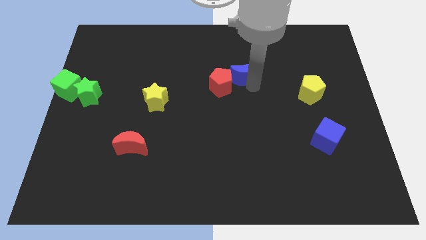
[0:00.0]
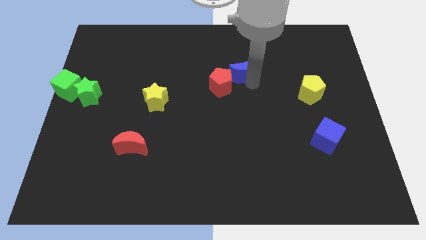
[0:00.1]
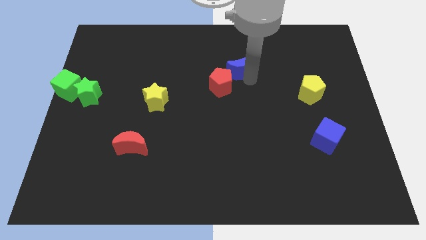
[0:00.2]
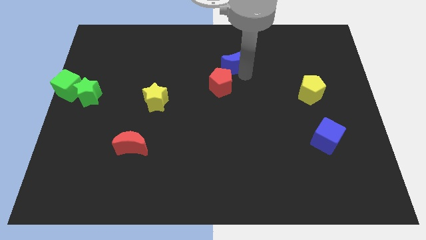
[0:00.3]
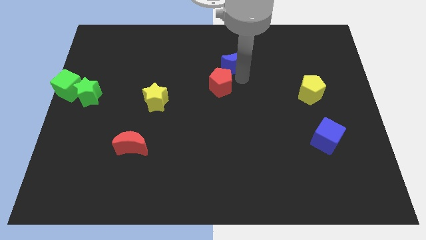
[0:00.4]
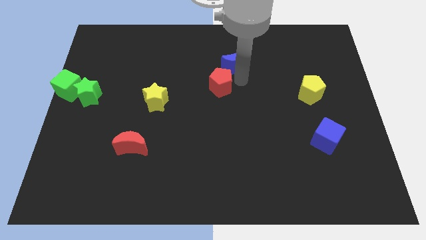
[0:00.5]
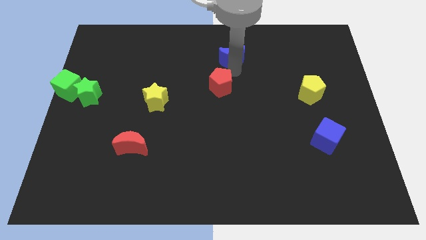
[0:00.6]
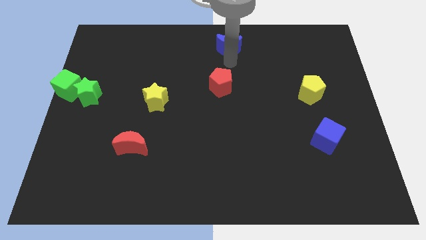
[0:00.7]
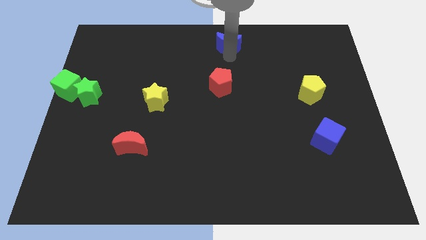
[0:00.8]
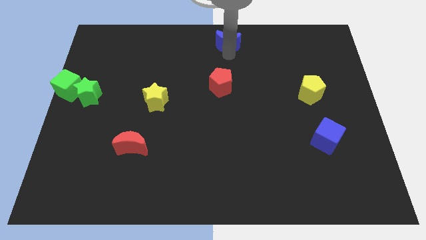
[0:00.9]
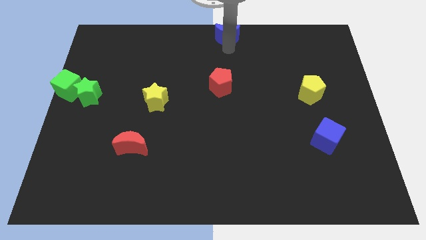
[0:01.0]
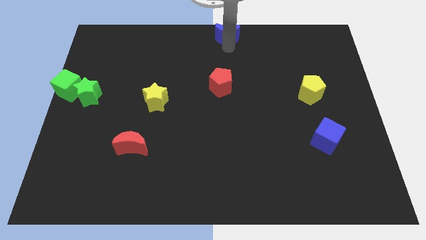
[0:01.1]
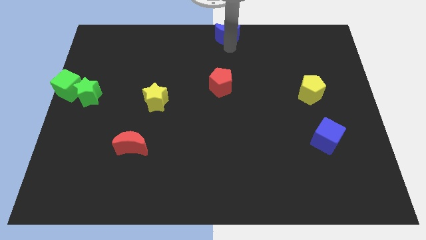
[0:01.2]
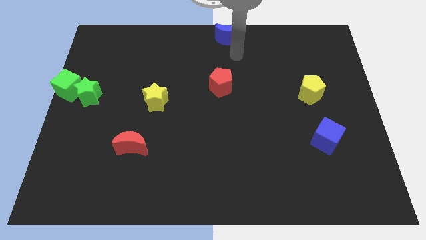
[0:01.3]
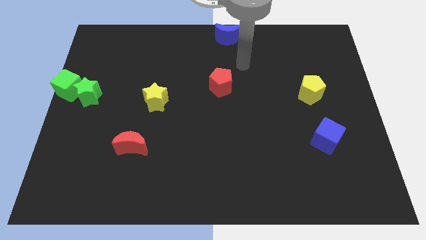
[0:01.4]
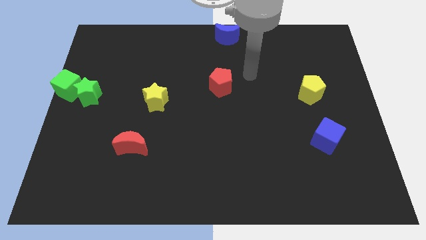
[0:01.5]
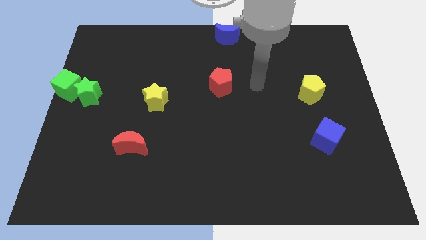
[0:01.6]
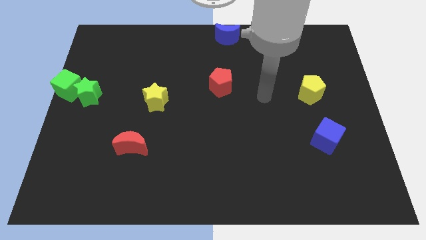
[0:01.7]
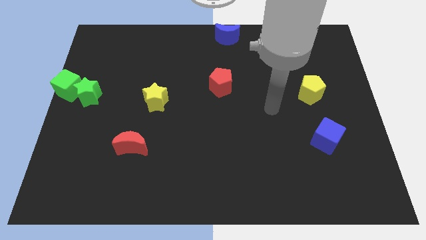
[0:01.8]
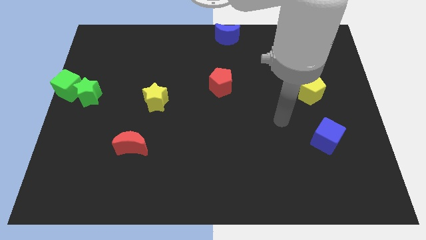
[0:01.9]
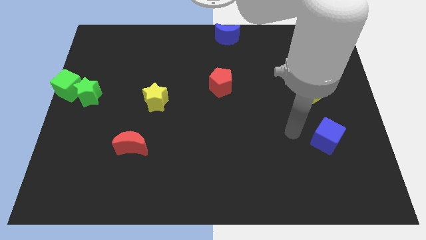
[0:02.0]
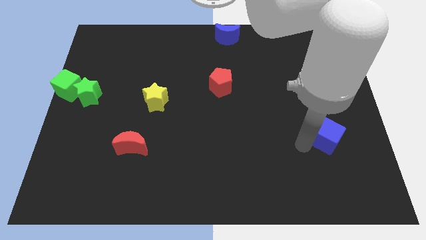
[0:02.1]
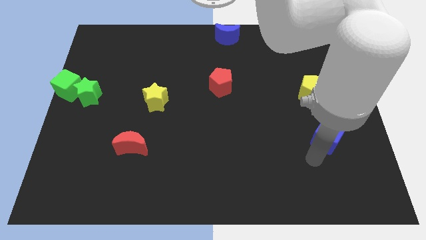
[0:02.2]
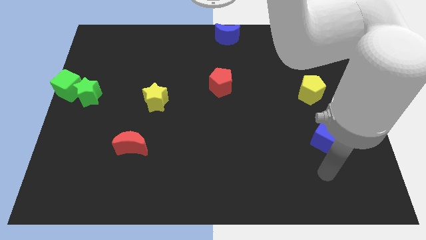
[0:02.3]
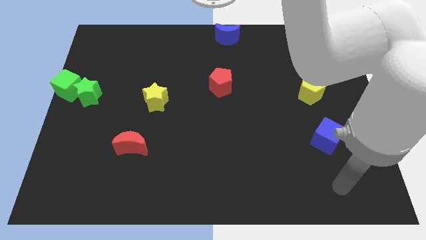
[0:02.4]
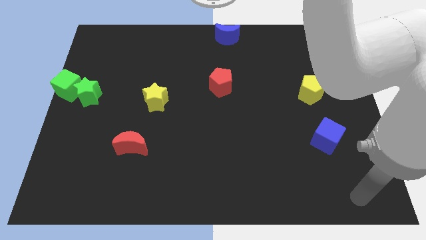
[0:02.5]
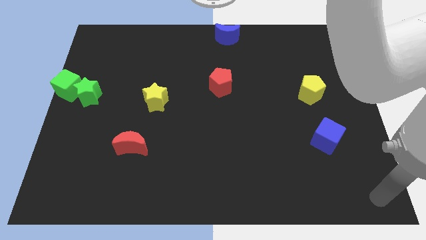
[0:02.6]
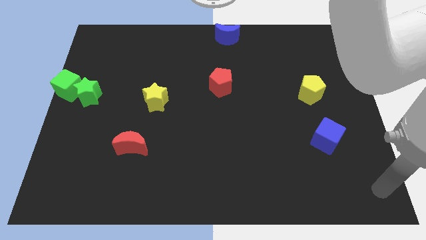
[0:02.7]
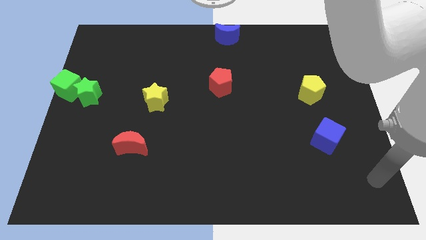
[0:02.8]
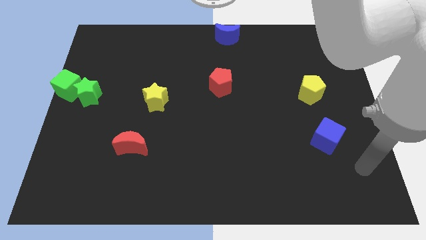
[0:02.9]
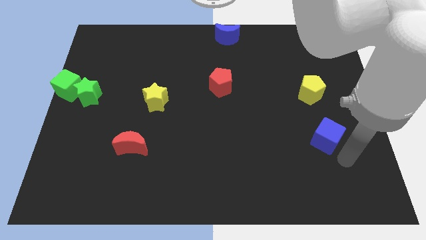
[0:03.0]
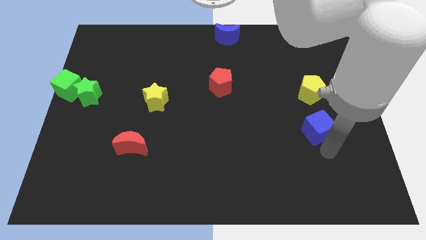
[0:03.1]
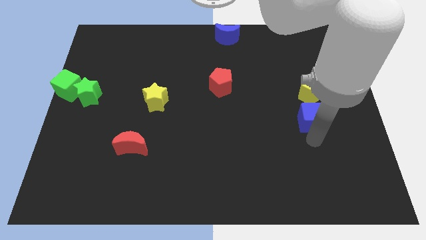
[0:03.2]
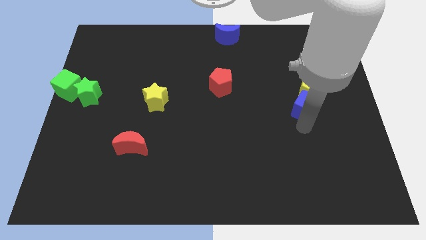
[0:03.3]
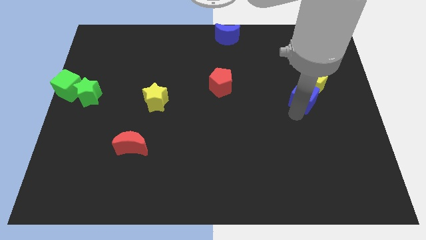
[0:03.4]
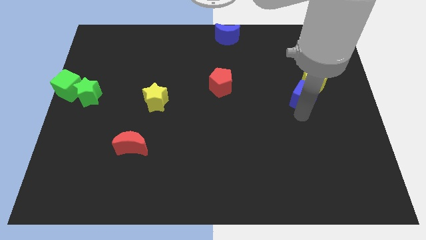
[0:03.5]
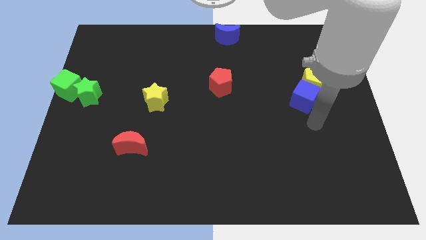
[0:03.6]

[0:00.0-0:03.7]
place the blue crescent towards the top center side of the board

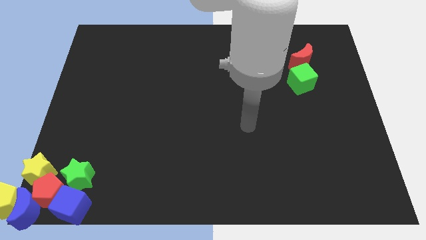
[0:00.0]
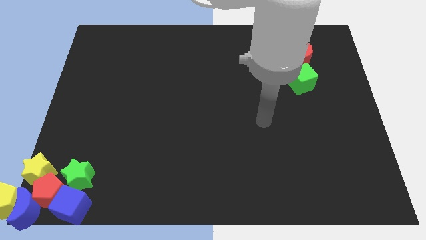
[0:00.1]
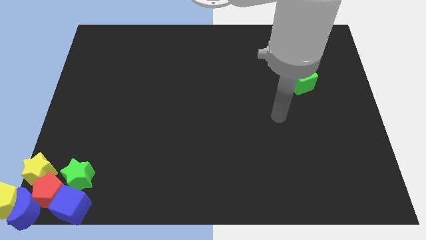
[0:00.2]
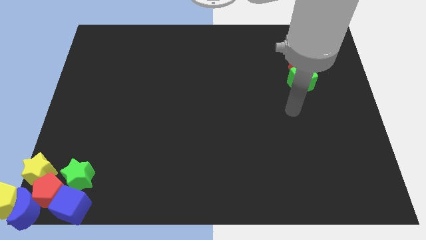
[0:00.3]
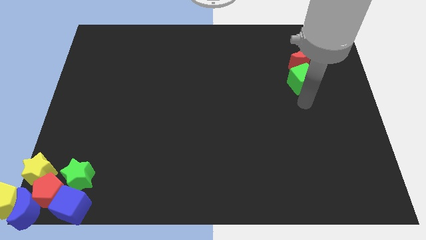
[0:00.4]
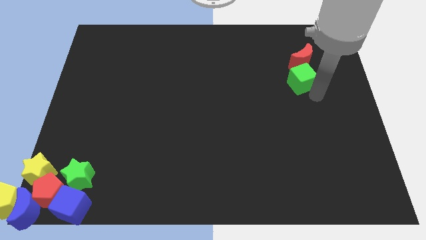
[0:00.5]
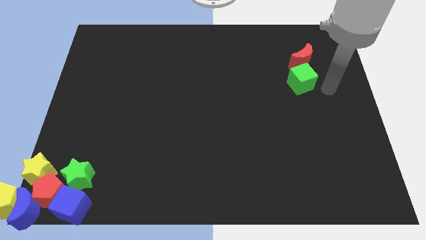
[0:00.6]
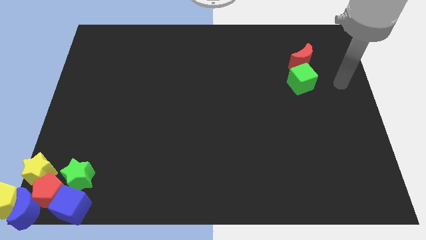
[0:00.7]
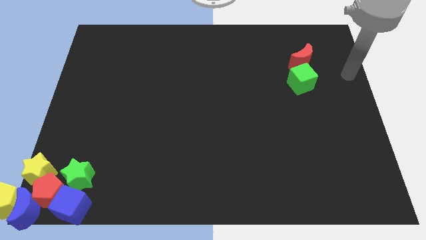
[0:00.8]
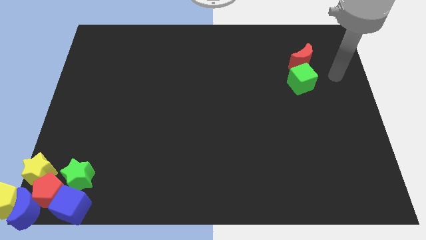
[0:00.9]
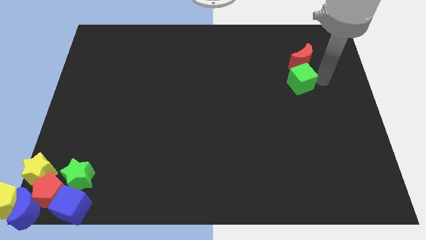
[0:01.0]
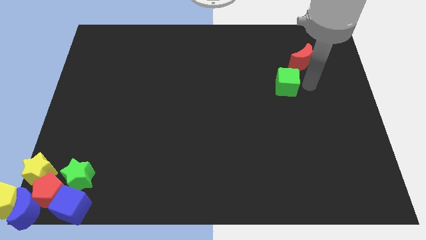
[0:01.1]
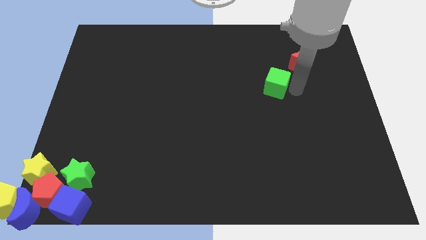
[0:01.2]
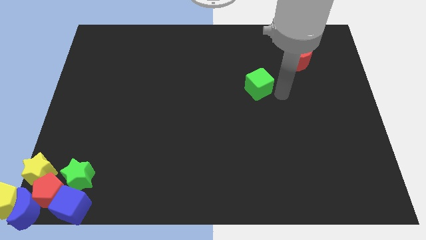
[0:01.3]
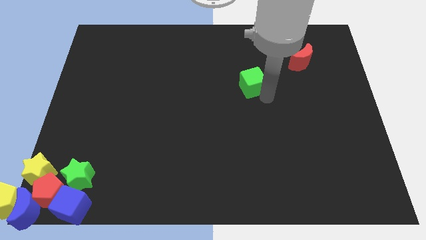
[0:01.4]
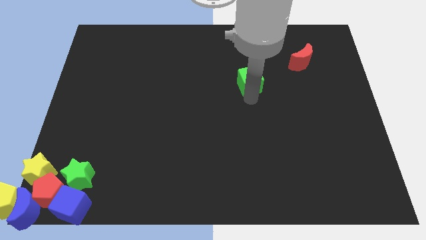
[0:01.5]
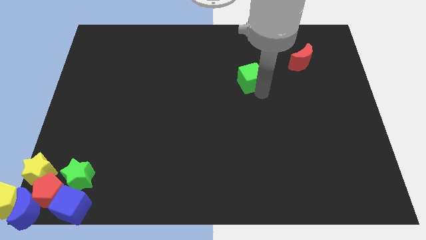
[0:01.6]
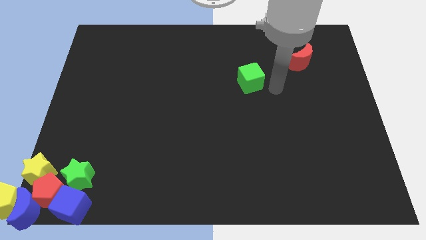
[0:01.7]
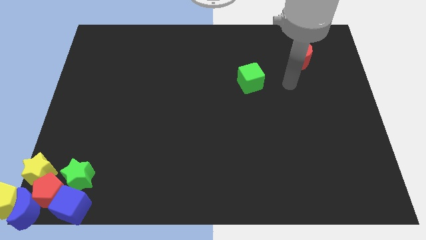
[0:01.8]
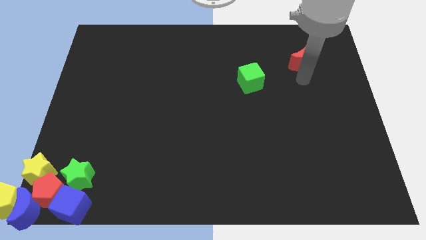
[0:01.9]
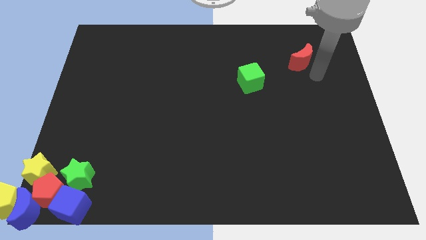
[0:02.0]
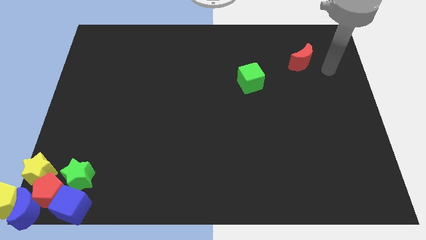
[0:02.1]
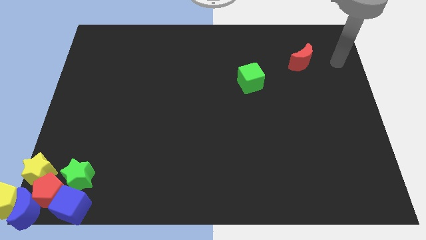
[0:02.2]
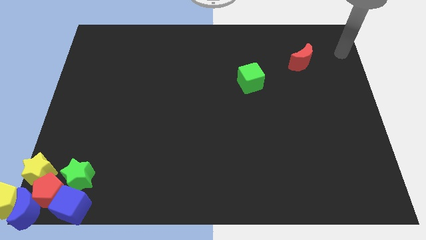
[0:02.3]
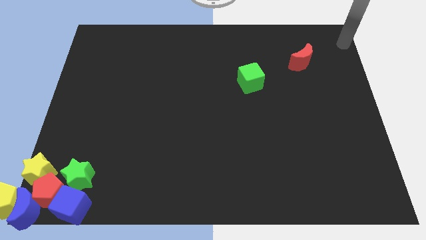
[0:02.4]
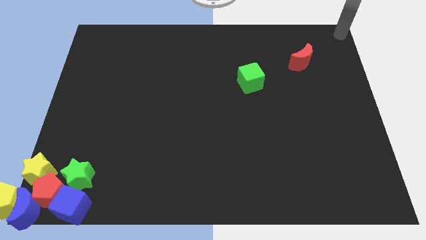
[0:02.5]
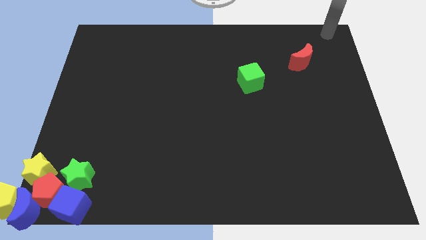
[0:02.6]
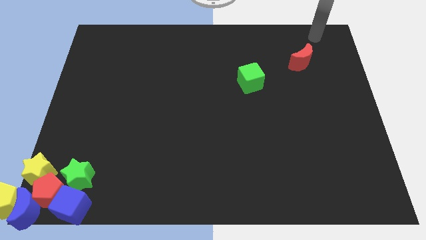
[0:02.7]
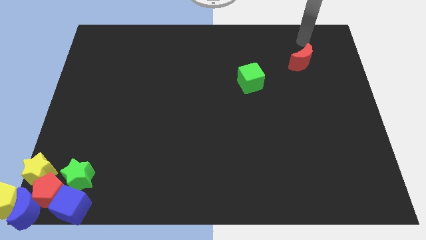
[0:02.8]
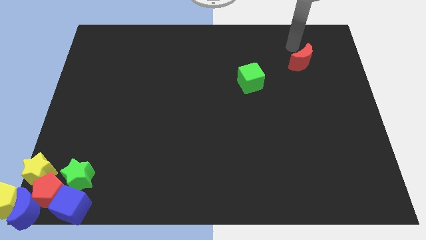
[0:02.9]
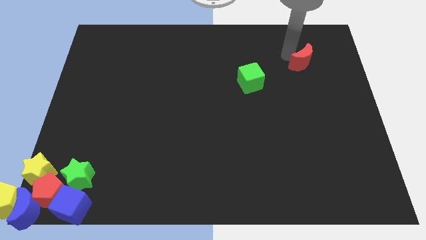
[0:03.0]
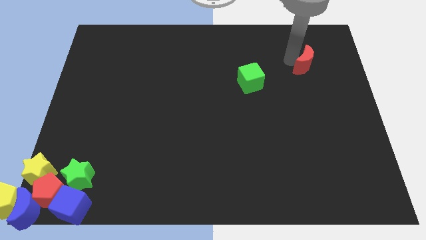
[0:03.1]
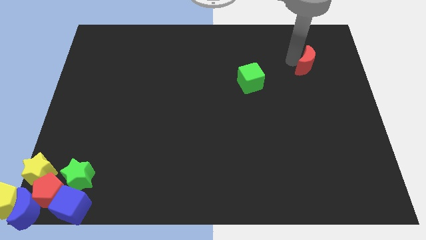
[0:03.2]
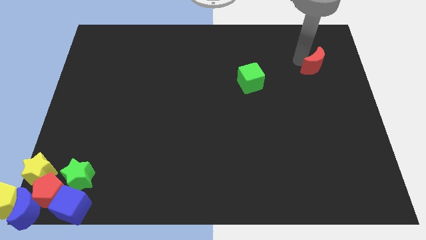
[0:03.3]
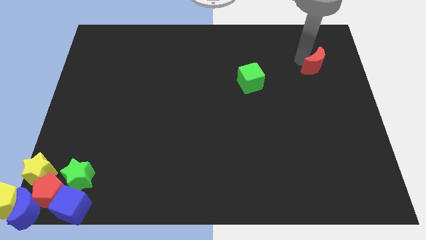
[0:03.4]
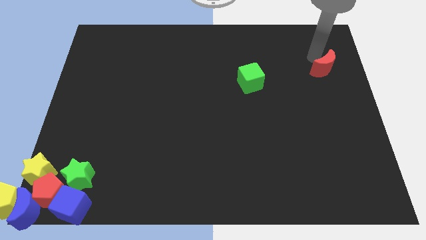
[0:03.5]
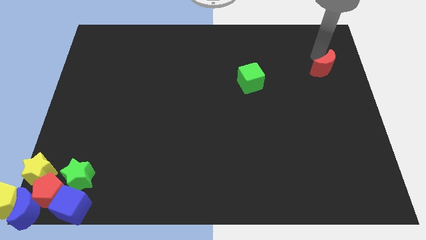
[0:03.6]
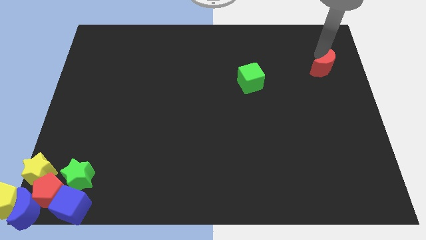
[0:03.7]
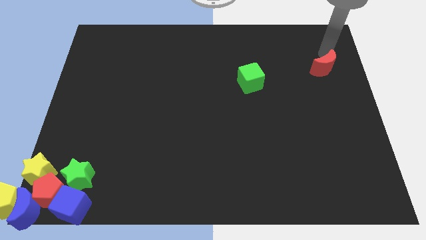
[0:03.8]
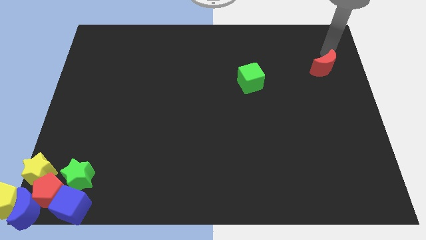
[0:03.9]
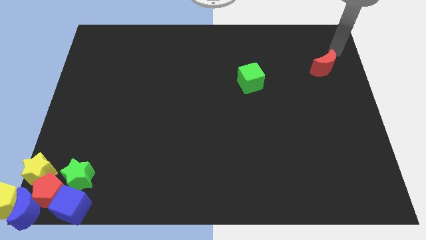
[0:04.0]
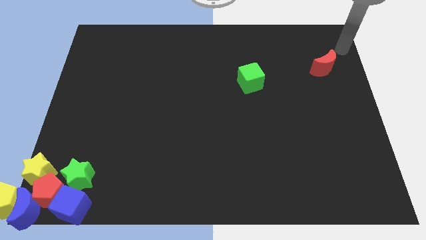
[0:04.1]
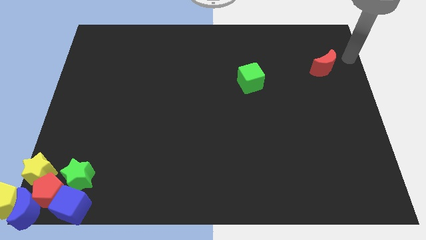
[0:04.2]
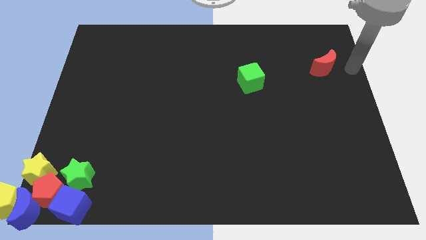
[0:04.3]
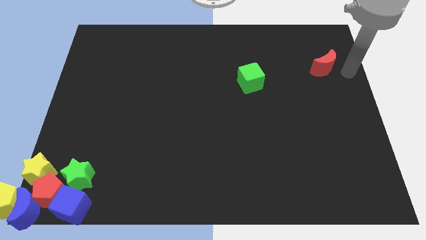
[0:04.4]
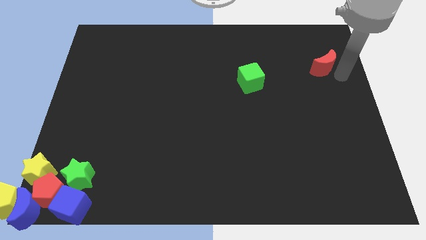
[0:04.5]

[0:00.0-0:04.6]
move the green star to the left side of the board

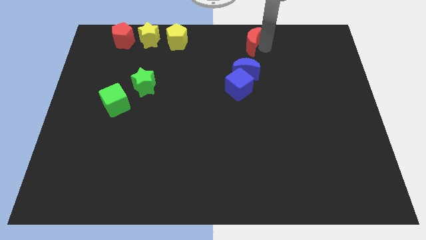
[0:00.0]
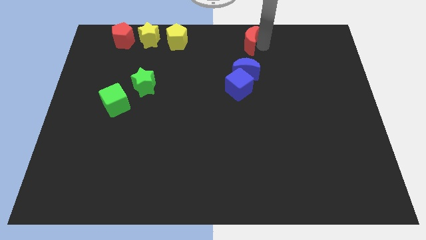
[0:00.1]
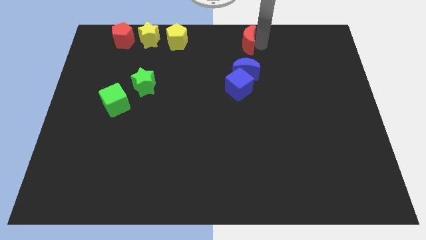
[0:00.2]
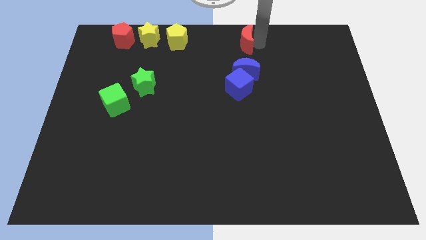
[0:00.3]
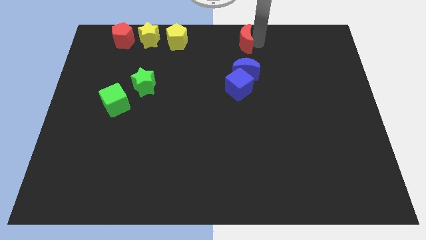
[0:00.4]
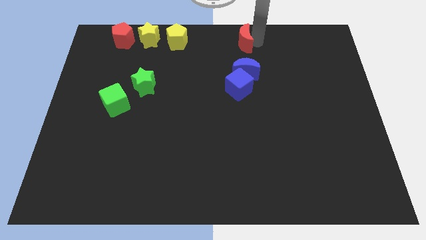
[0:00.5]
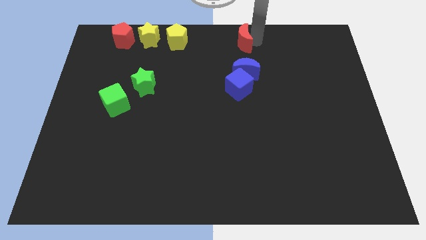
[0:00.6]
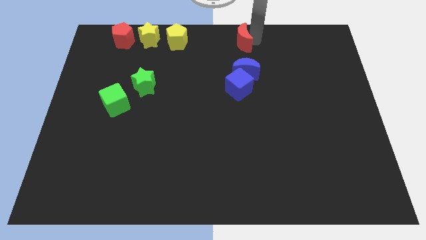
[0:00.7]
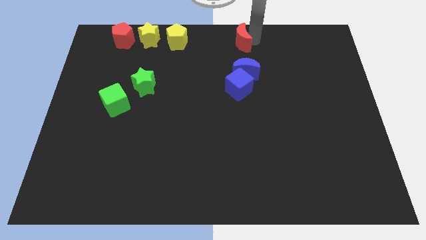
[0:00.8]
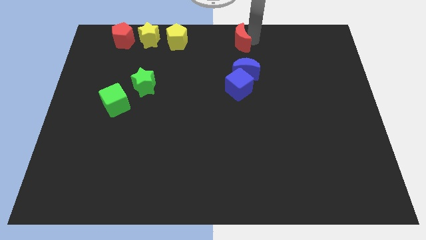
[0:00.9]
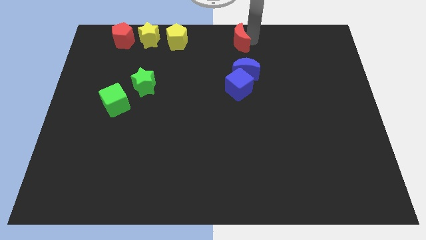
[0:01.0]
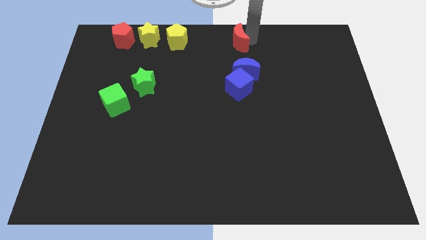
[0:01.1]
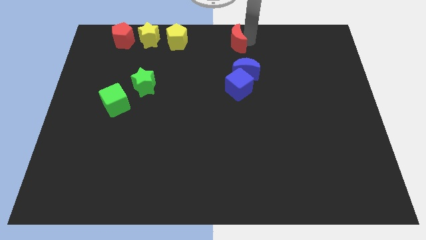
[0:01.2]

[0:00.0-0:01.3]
move the red crescent slightly left
